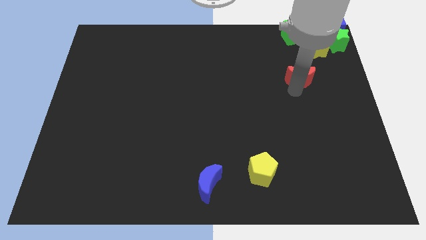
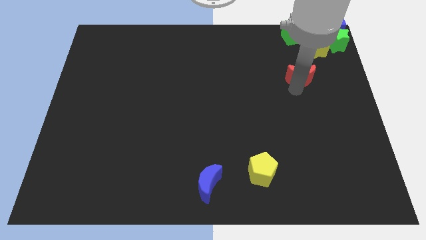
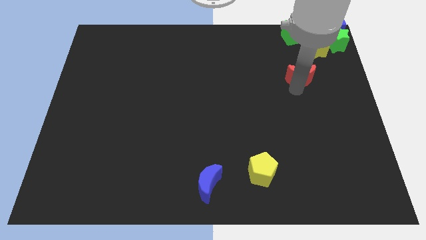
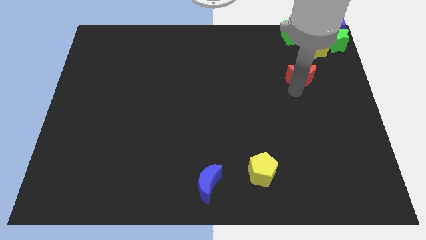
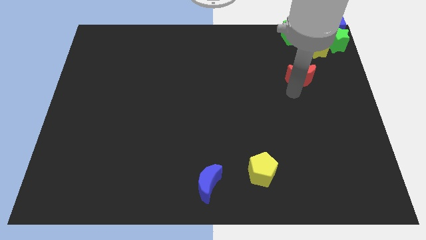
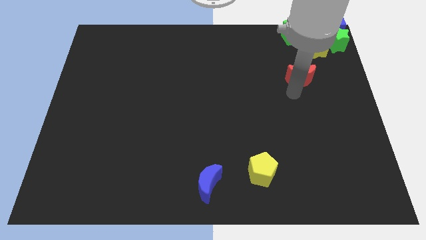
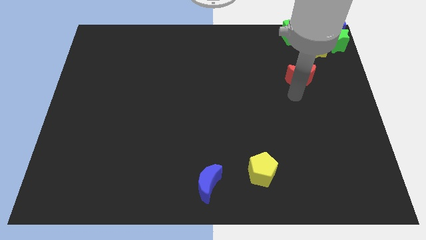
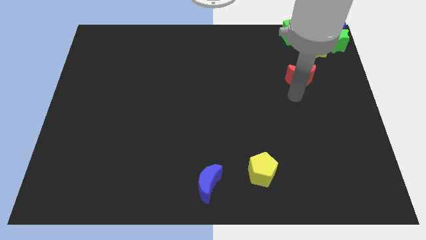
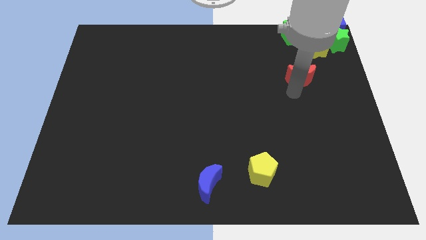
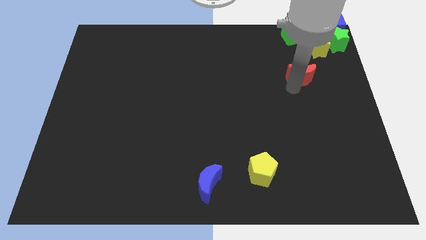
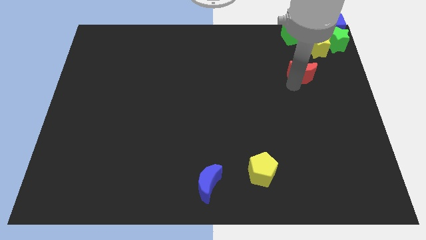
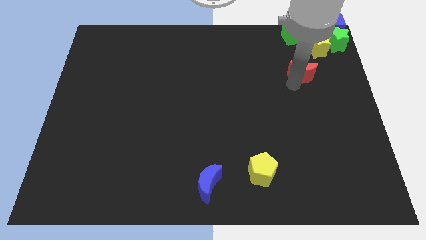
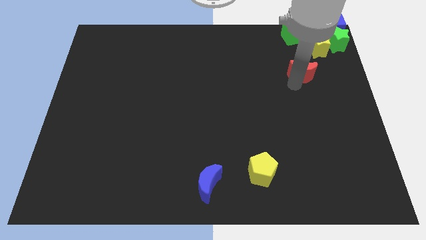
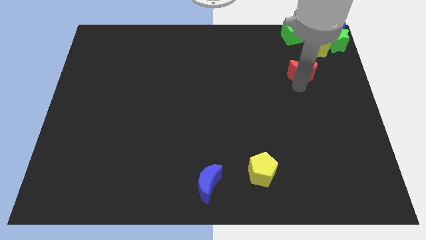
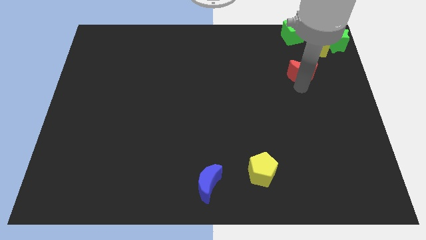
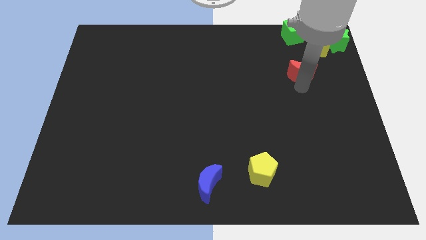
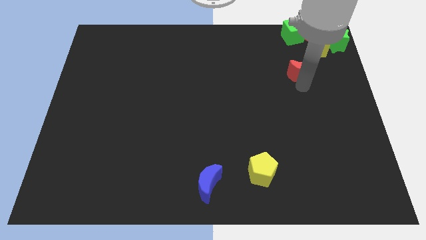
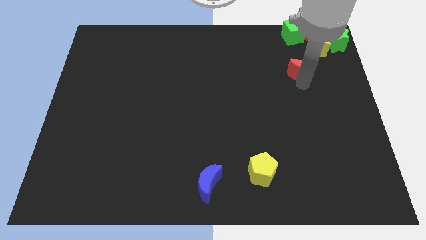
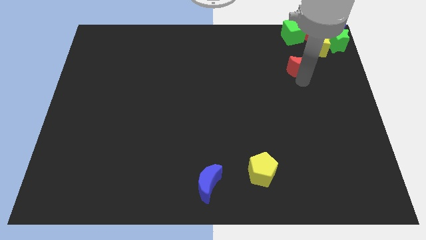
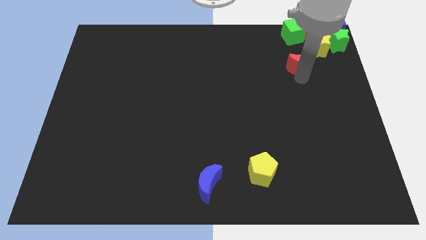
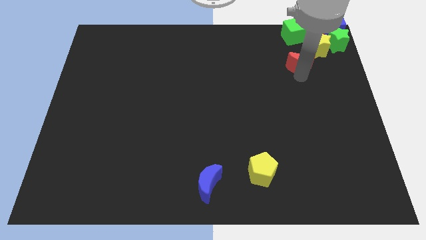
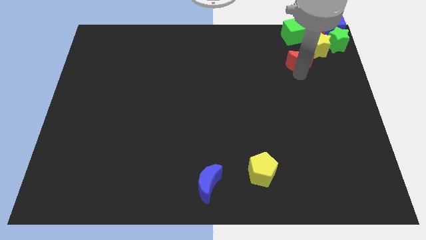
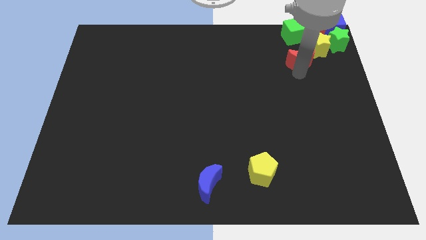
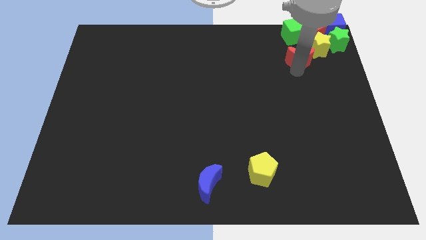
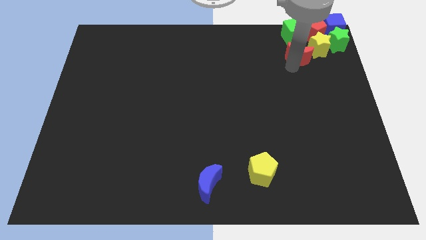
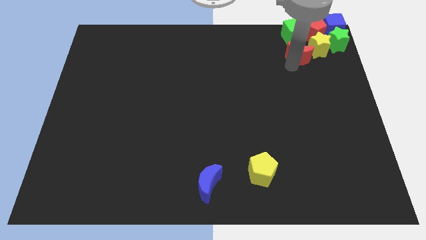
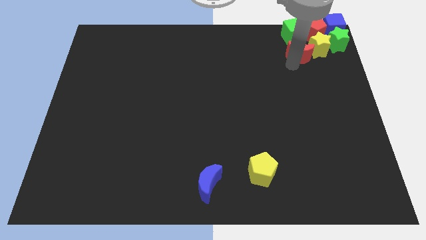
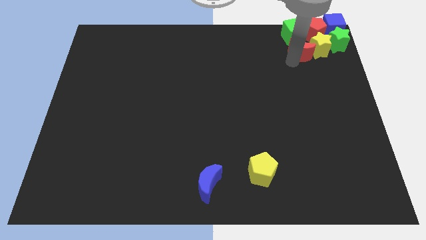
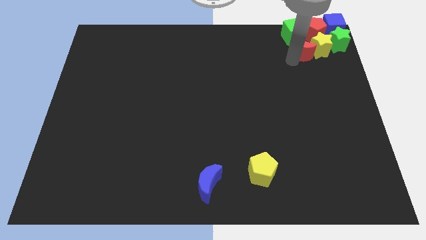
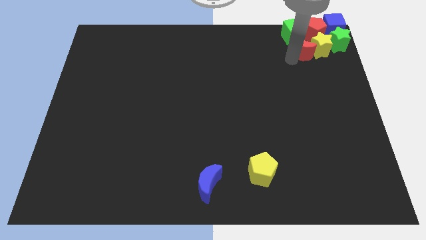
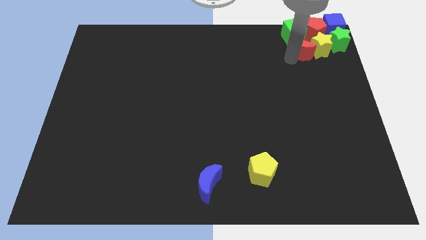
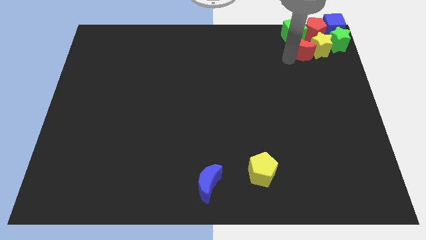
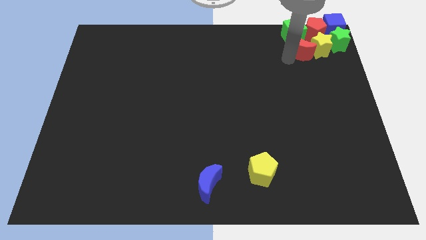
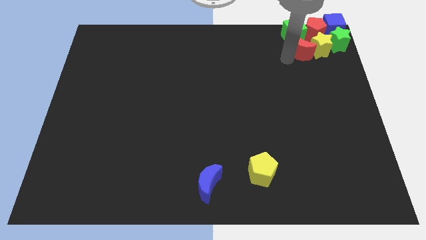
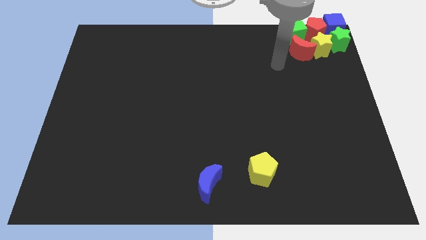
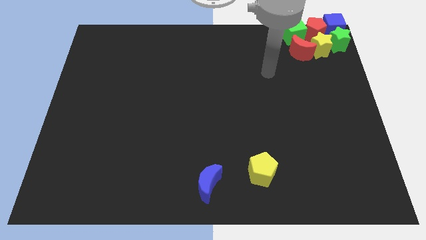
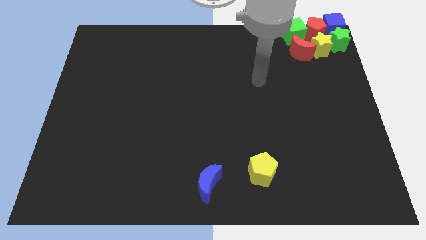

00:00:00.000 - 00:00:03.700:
move the red moon into the yellow star

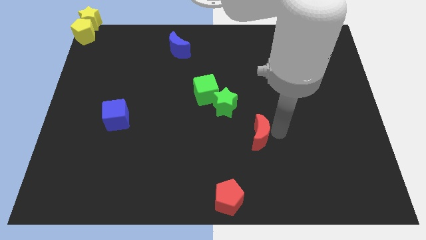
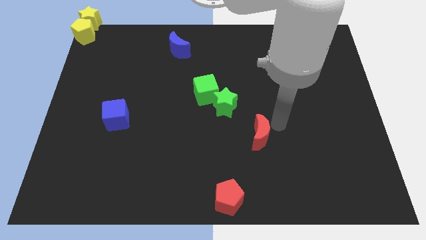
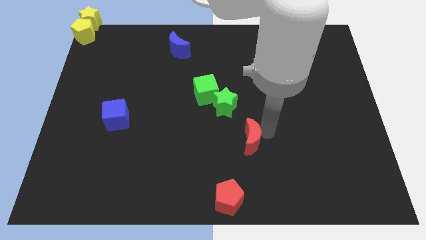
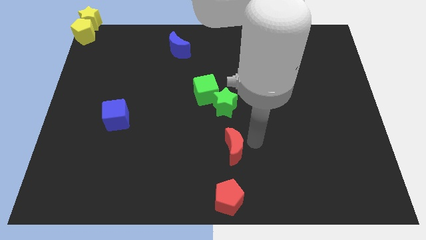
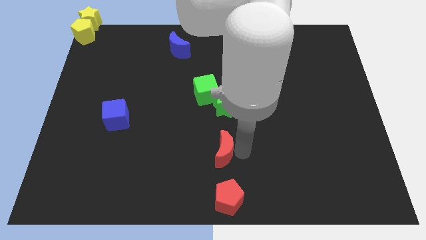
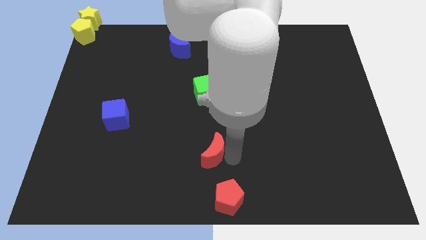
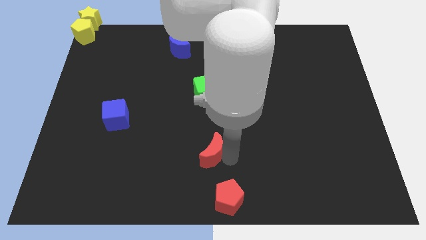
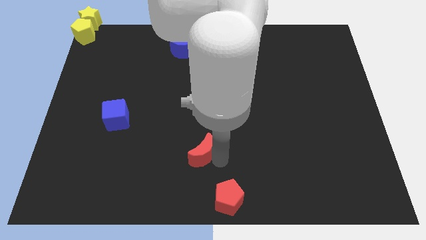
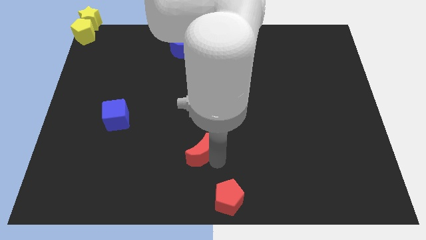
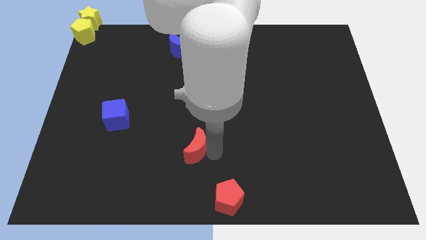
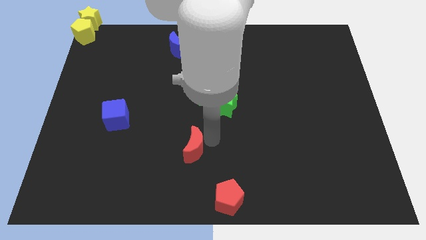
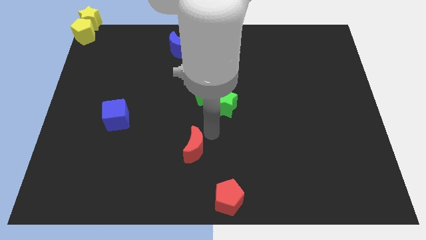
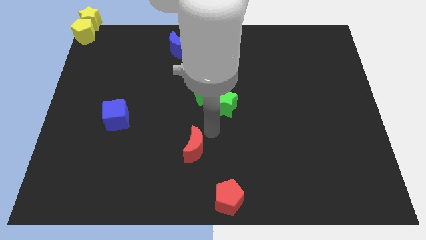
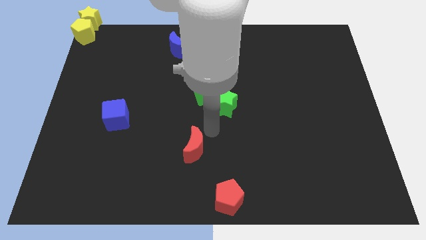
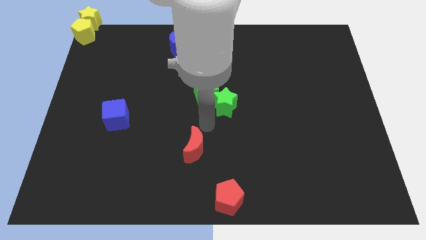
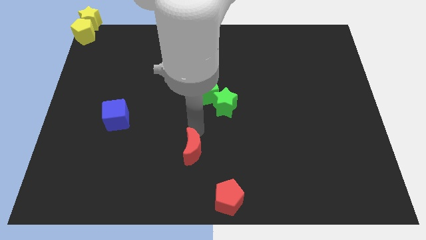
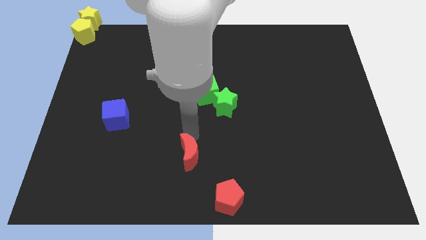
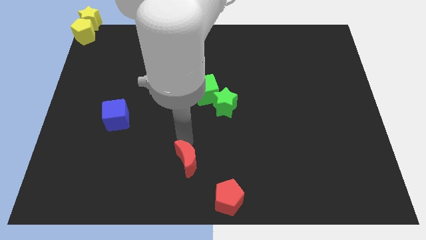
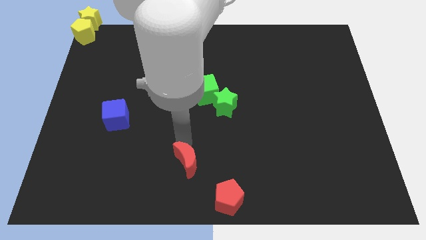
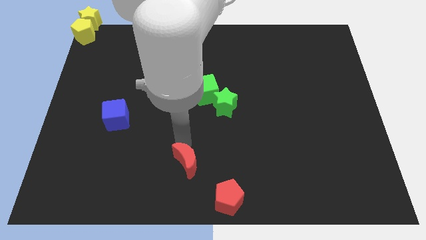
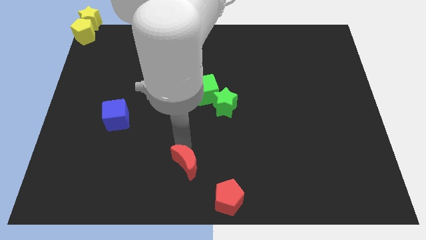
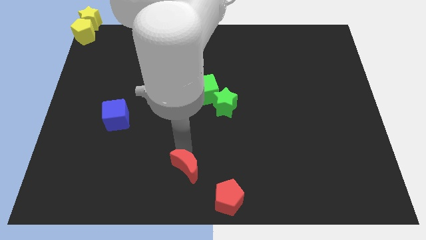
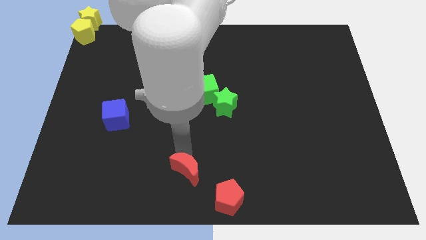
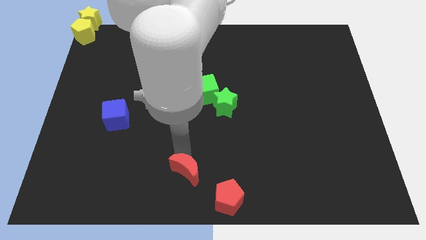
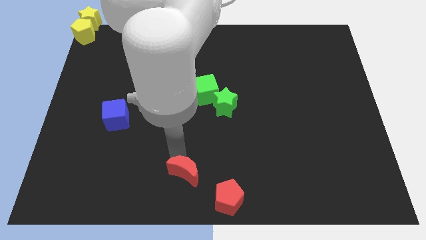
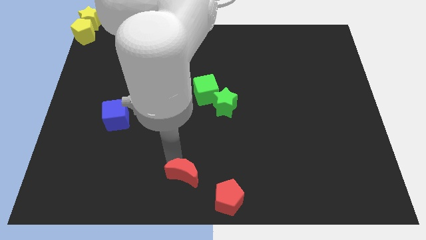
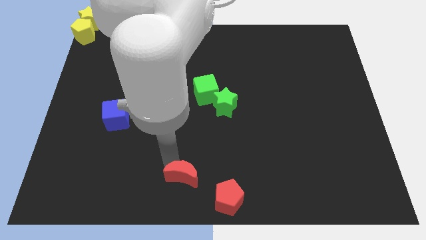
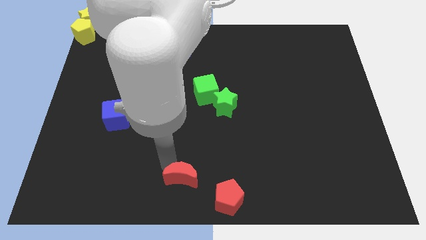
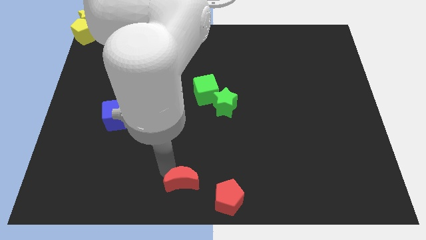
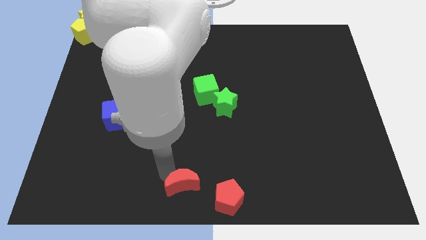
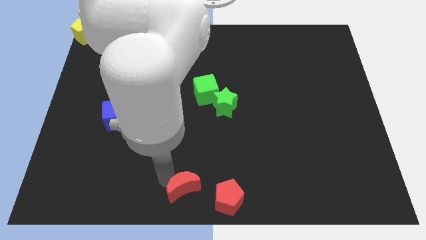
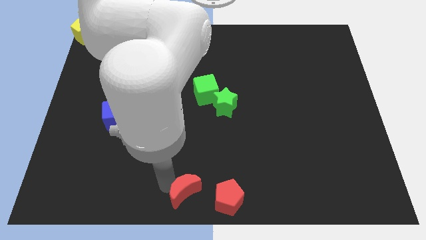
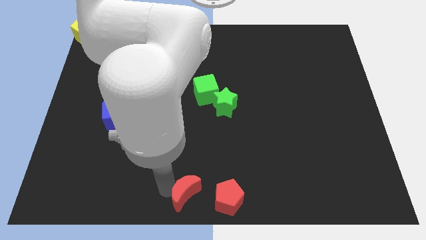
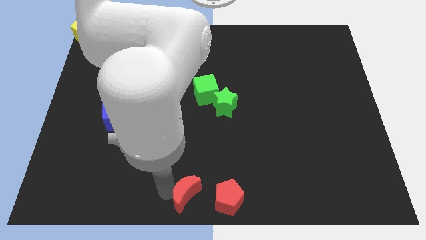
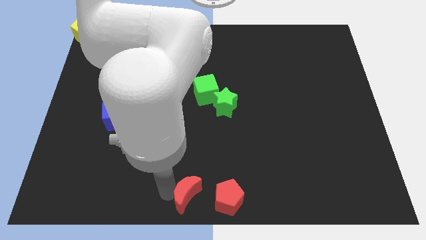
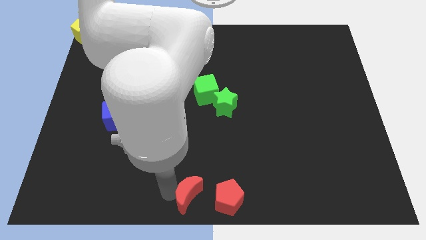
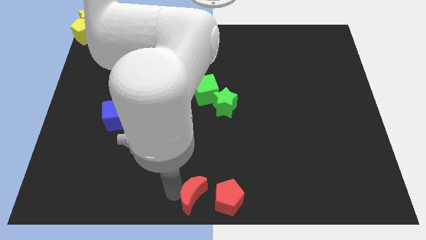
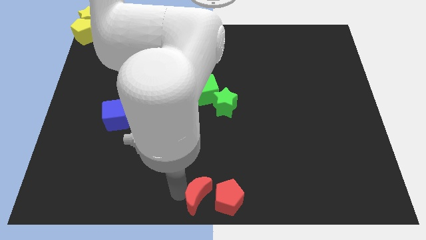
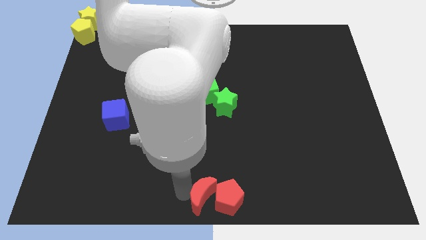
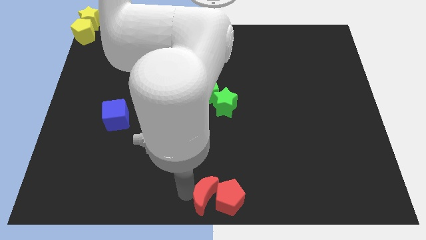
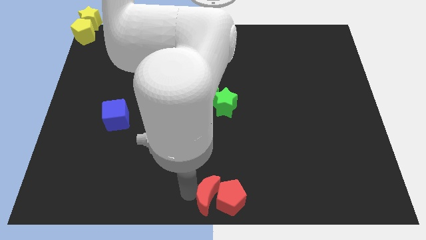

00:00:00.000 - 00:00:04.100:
move the red crescent left to the red pentagon

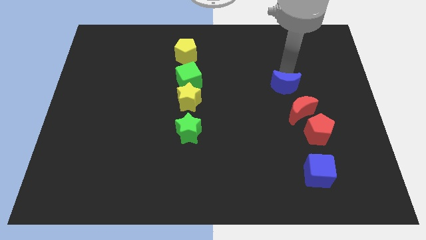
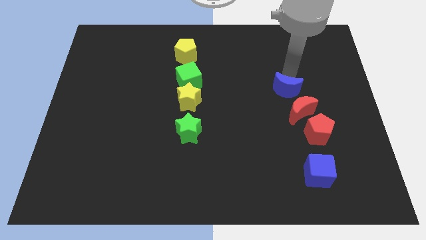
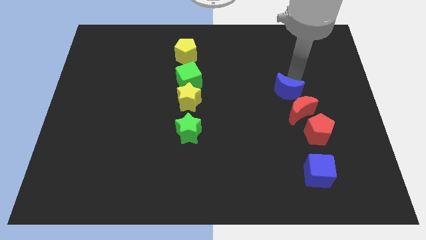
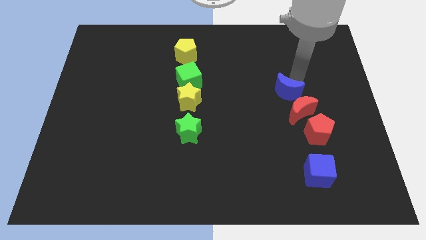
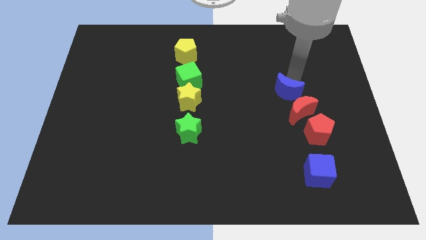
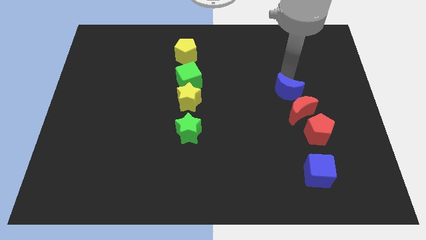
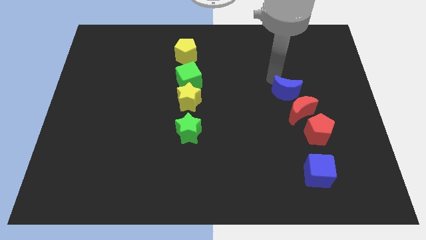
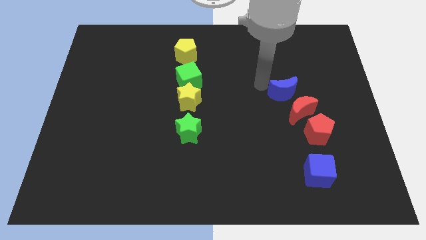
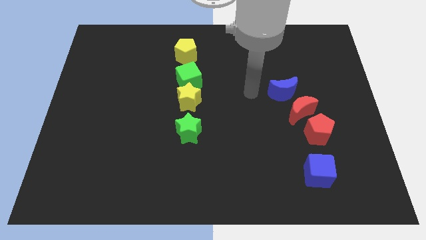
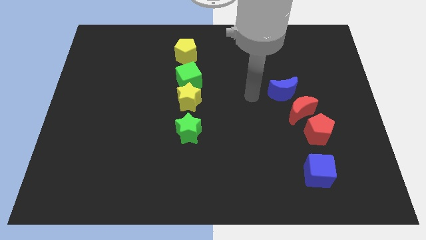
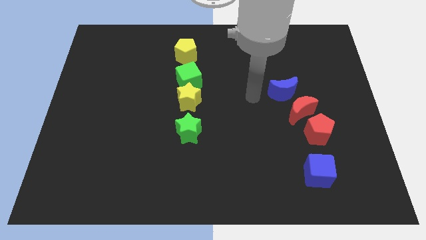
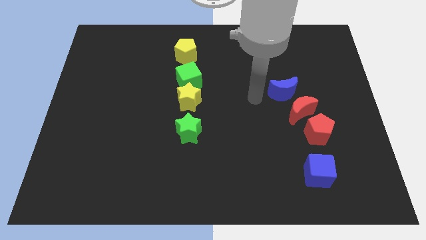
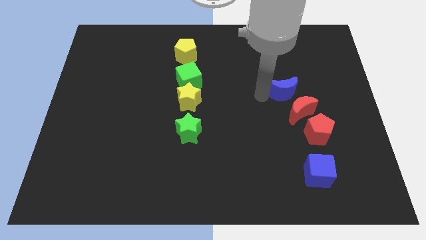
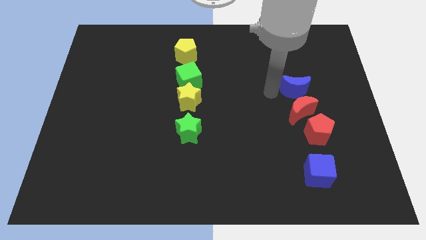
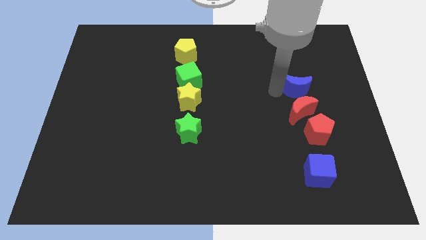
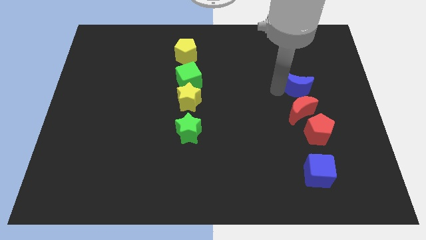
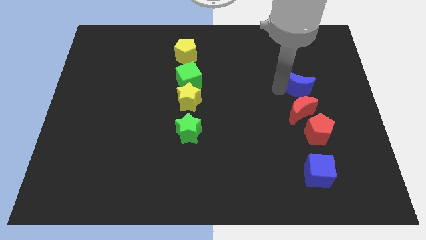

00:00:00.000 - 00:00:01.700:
move the blue crescent close to the red crescent
